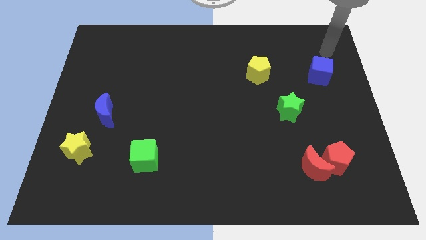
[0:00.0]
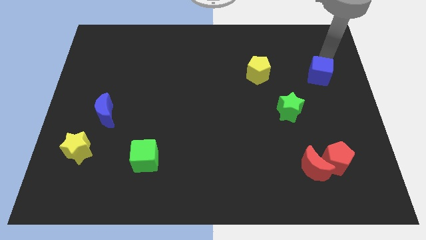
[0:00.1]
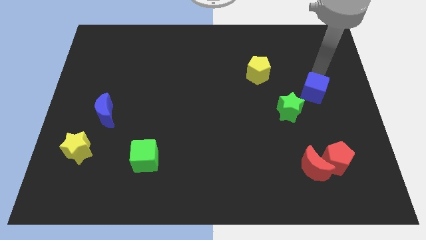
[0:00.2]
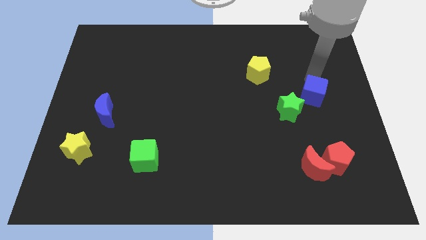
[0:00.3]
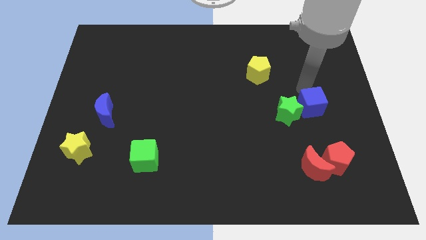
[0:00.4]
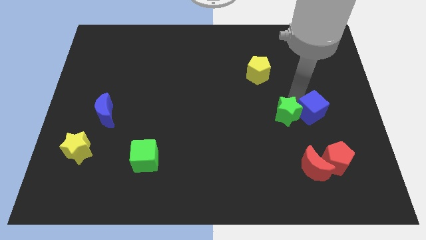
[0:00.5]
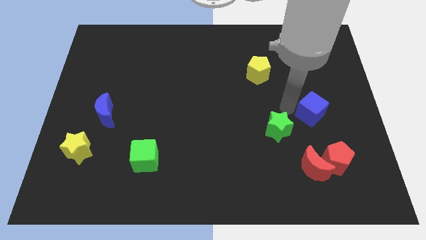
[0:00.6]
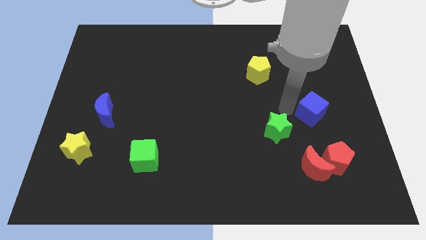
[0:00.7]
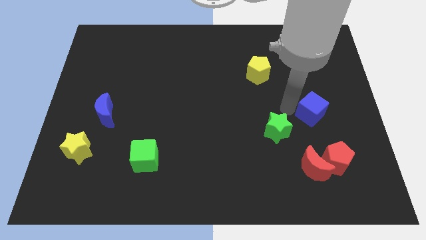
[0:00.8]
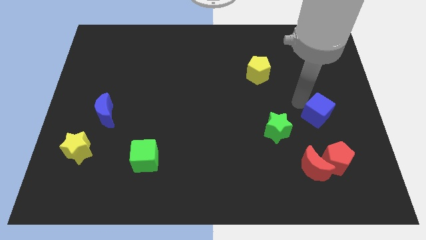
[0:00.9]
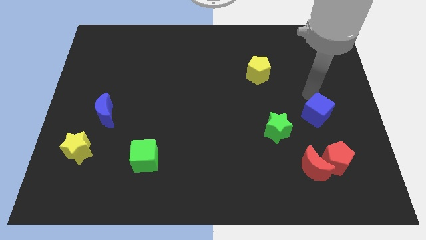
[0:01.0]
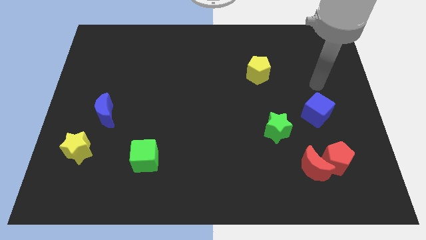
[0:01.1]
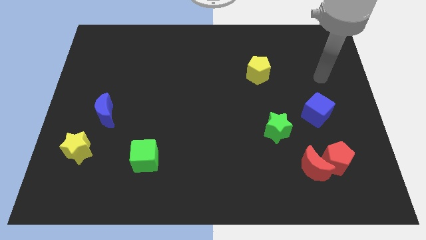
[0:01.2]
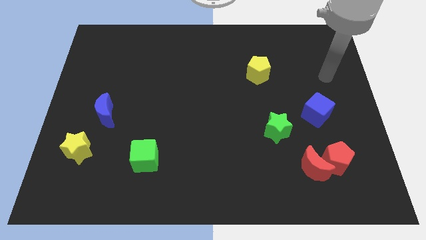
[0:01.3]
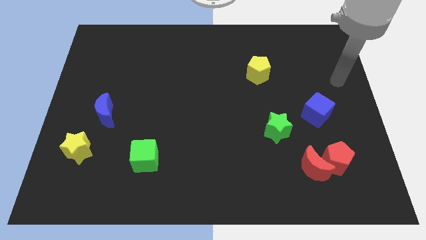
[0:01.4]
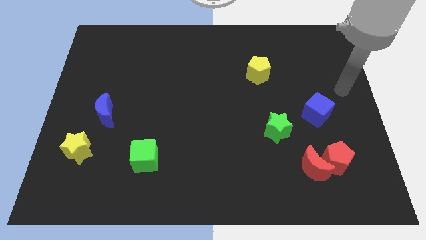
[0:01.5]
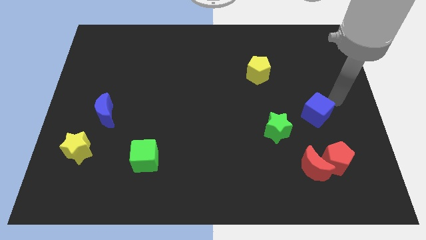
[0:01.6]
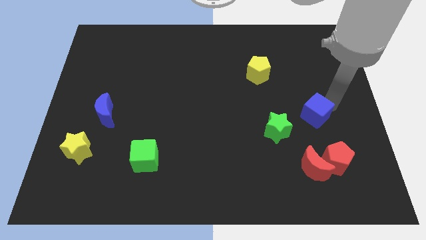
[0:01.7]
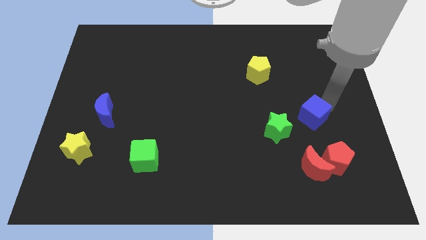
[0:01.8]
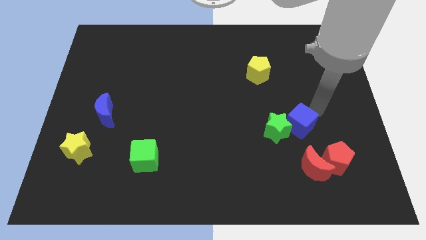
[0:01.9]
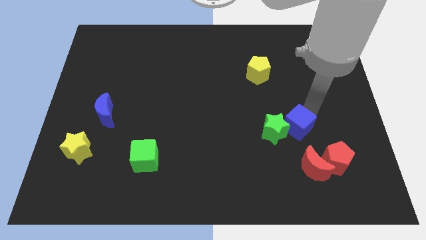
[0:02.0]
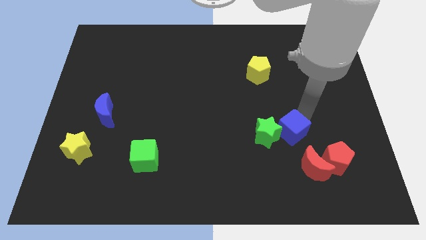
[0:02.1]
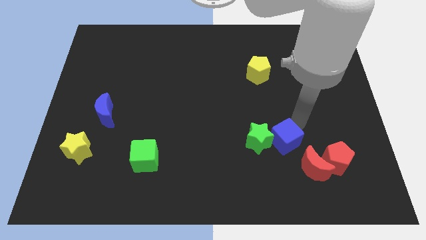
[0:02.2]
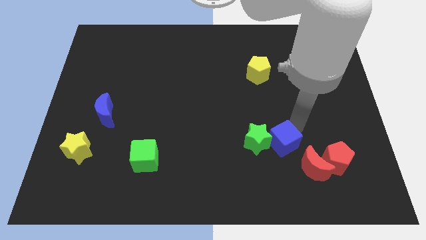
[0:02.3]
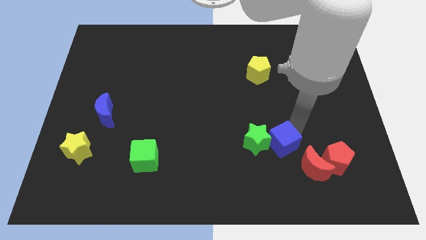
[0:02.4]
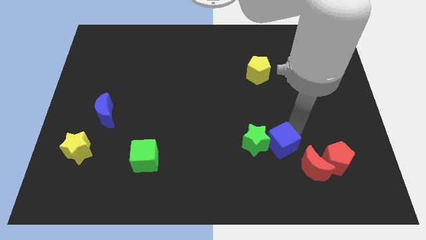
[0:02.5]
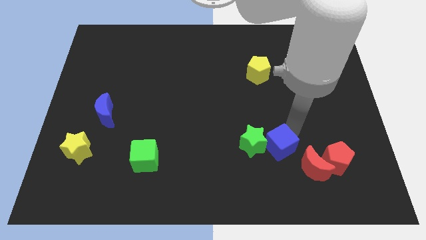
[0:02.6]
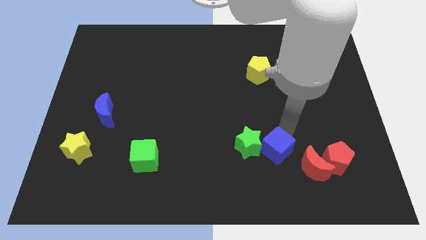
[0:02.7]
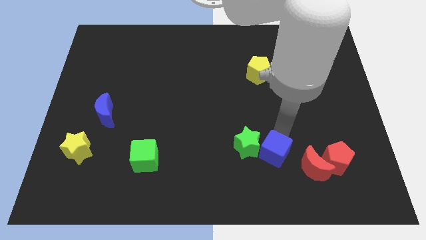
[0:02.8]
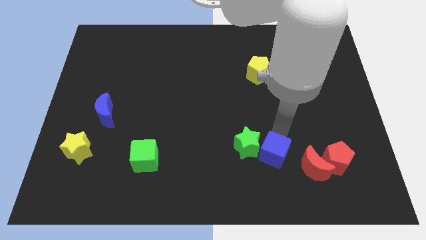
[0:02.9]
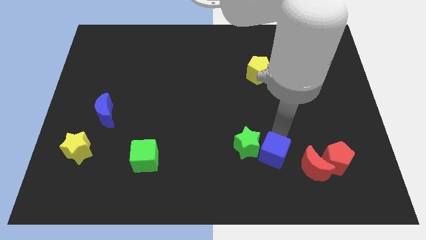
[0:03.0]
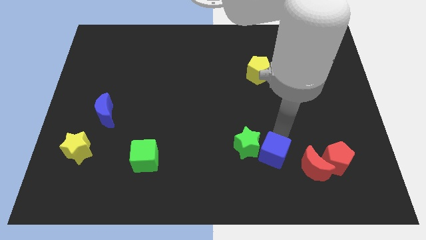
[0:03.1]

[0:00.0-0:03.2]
push the blue cube towards right of the green star

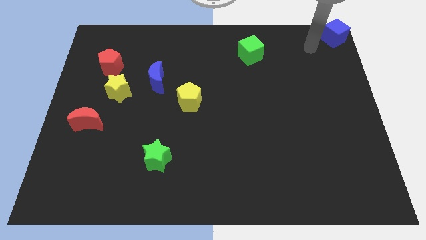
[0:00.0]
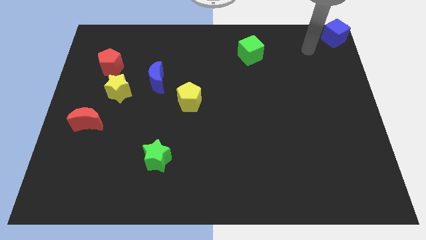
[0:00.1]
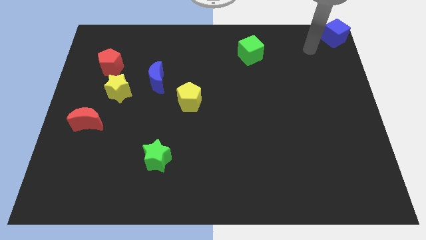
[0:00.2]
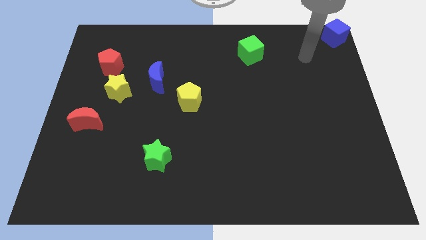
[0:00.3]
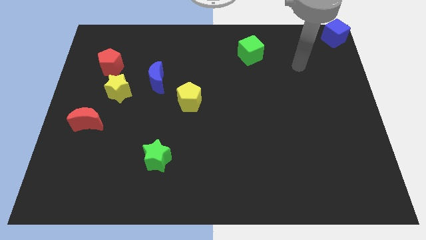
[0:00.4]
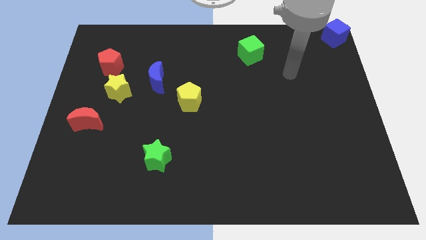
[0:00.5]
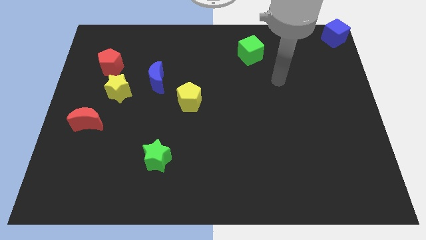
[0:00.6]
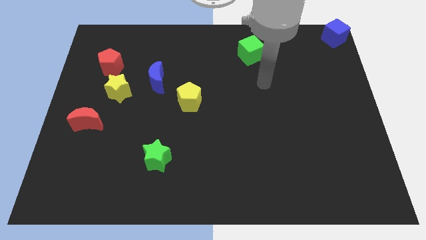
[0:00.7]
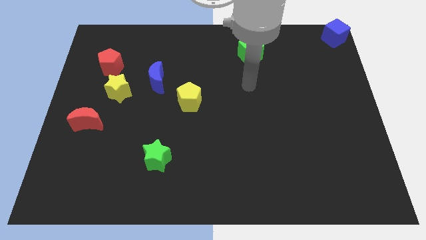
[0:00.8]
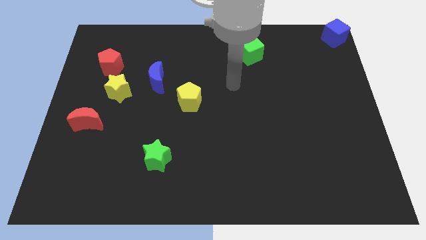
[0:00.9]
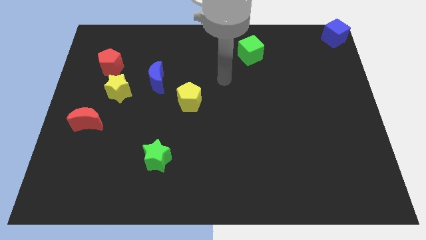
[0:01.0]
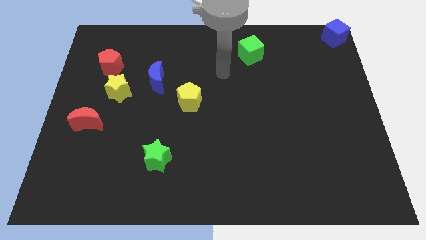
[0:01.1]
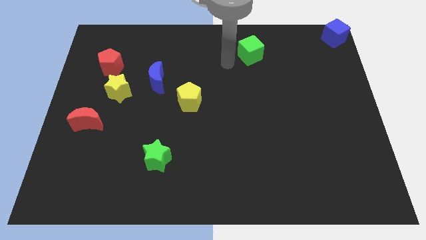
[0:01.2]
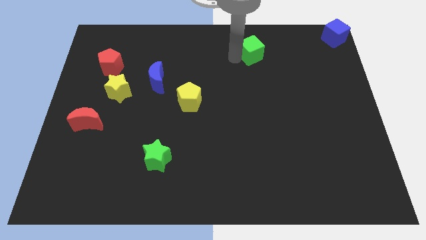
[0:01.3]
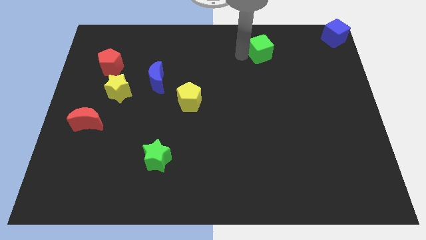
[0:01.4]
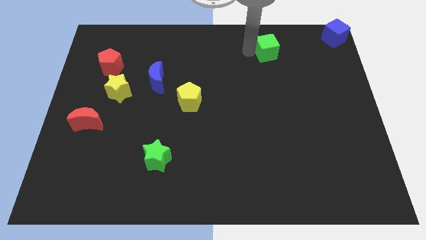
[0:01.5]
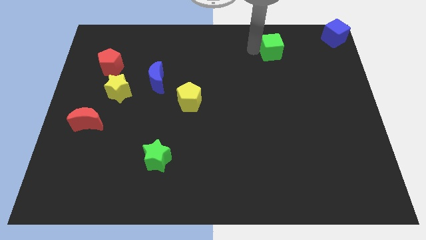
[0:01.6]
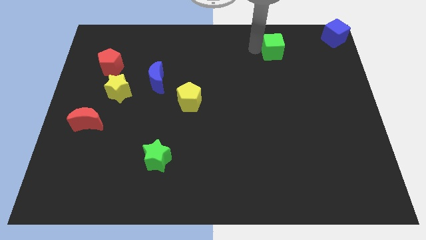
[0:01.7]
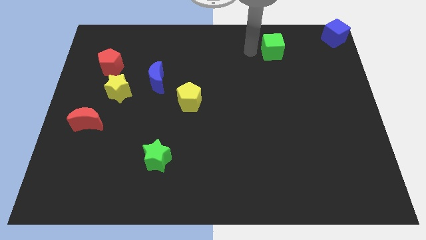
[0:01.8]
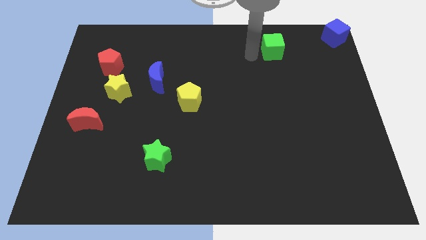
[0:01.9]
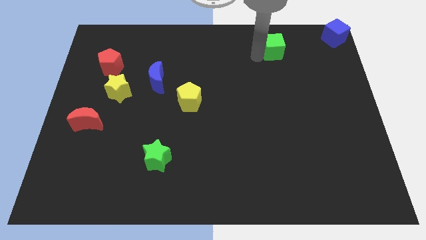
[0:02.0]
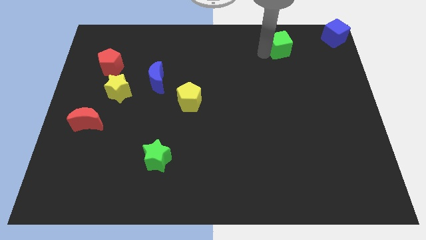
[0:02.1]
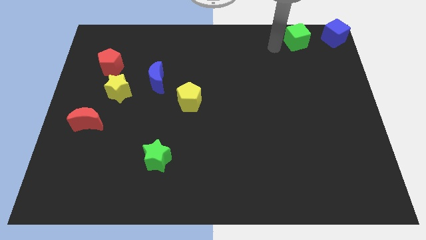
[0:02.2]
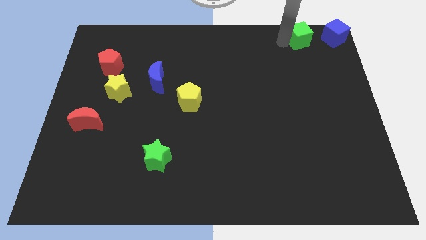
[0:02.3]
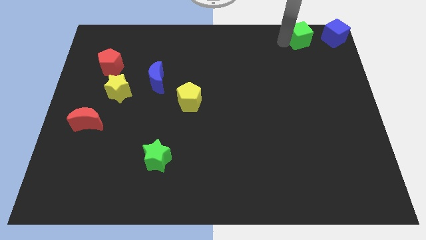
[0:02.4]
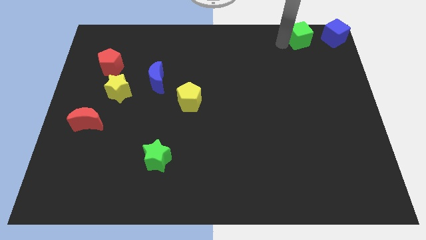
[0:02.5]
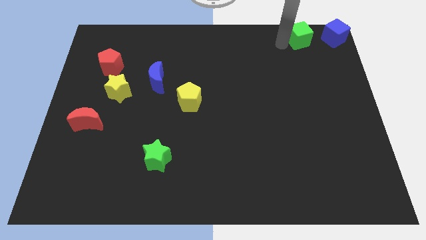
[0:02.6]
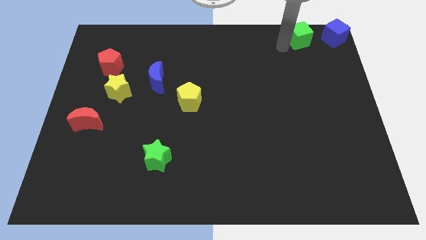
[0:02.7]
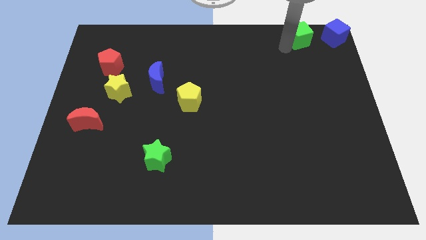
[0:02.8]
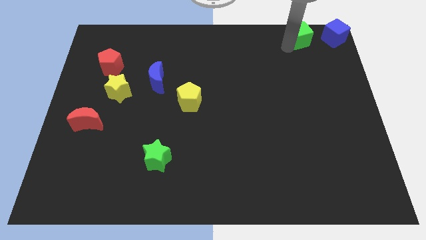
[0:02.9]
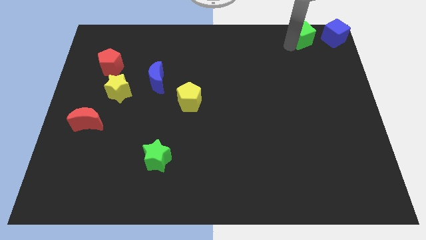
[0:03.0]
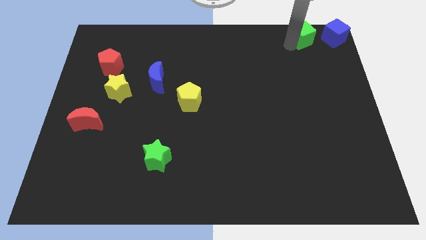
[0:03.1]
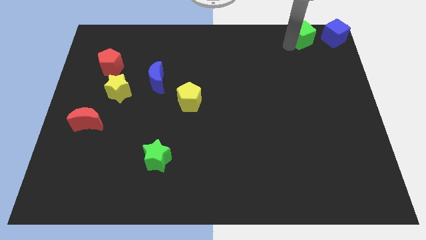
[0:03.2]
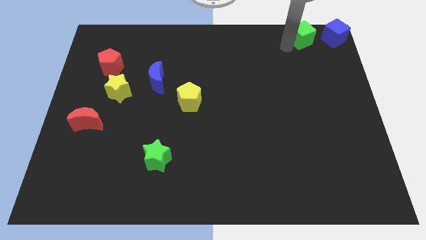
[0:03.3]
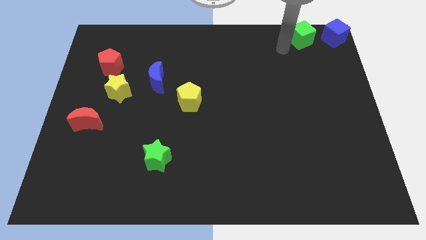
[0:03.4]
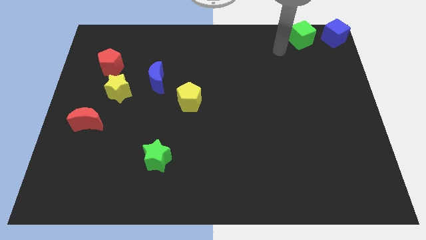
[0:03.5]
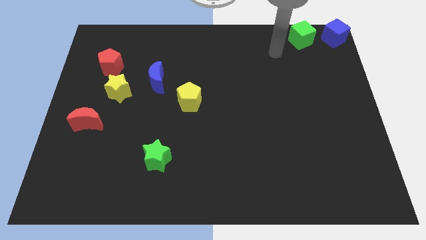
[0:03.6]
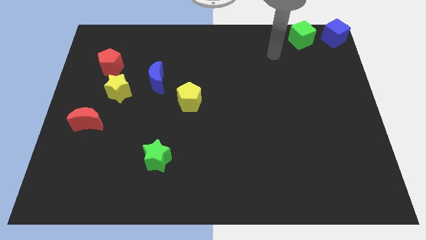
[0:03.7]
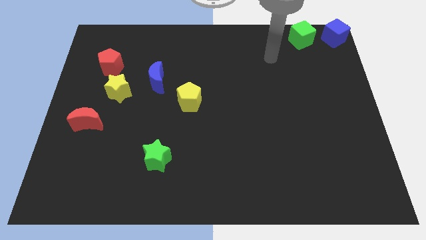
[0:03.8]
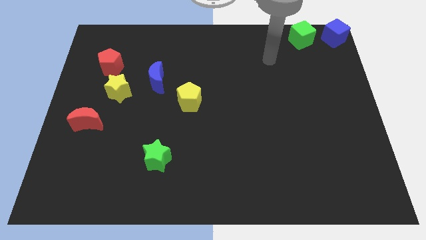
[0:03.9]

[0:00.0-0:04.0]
push the green cube close to the blue cube

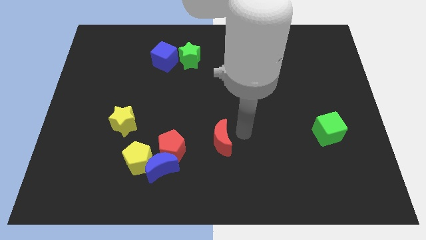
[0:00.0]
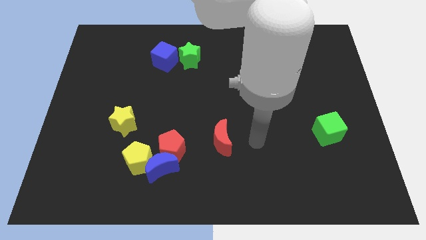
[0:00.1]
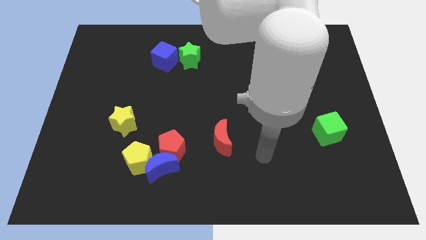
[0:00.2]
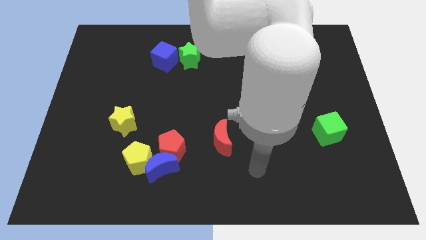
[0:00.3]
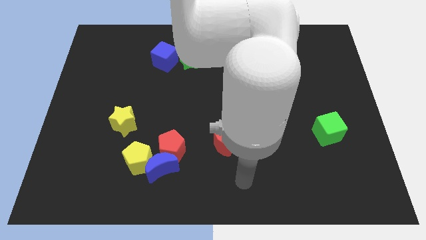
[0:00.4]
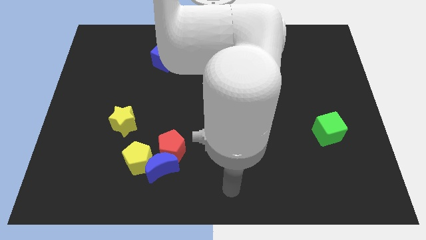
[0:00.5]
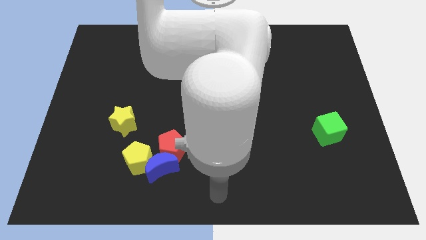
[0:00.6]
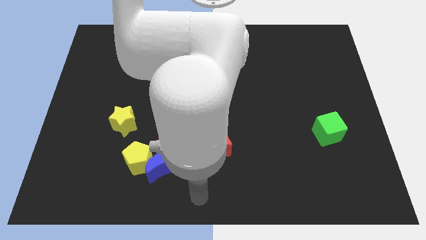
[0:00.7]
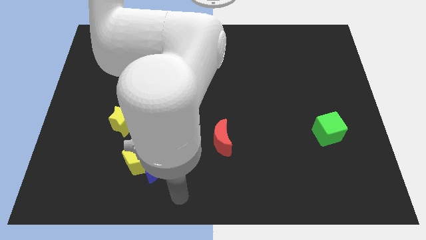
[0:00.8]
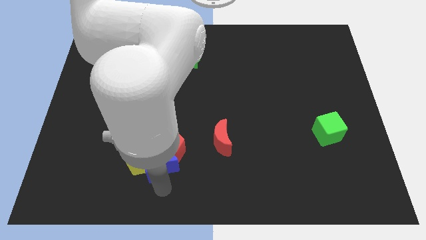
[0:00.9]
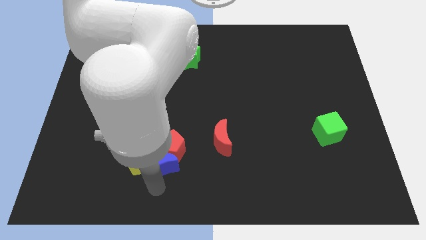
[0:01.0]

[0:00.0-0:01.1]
point your arm at the bottom of blue moon

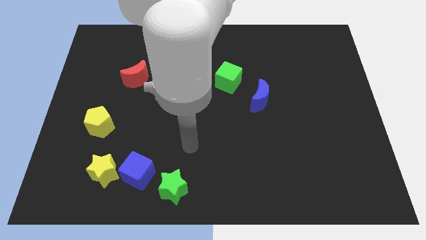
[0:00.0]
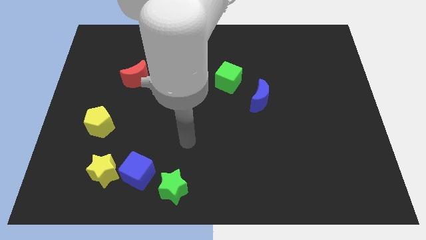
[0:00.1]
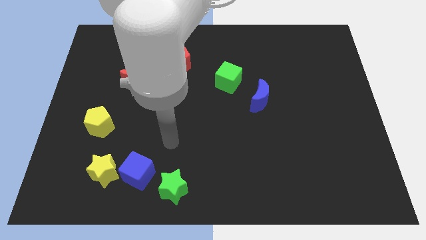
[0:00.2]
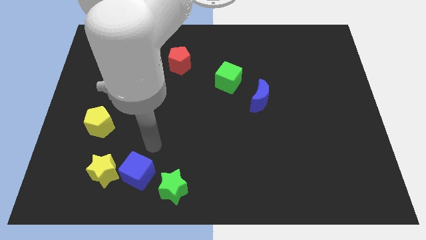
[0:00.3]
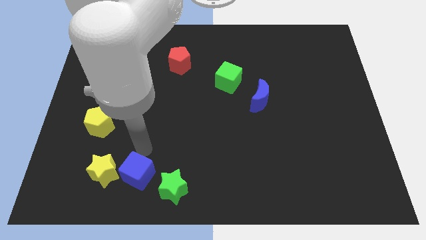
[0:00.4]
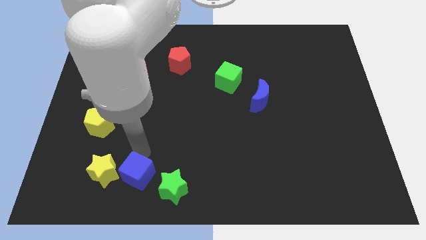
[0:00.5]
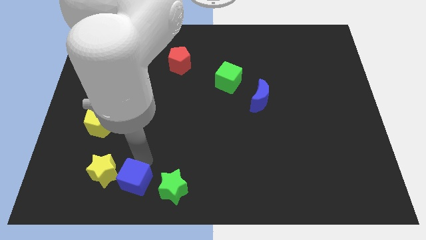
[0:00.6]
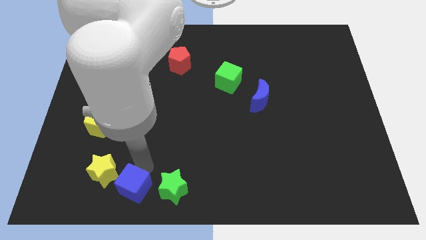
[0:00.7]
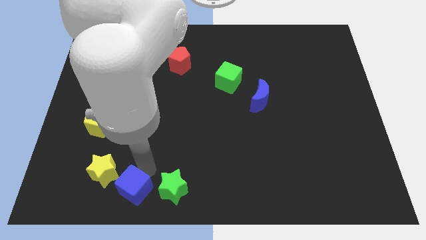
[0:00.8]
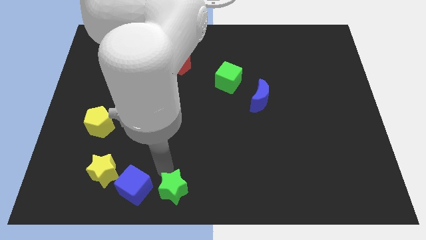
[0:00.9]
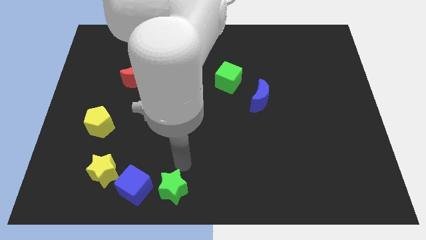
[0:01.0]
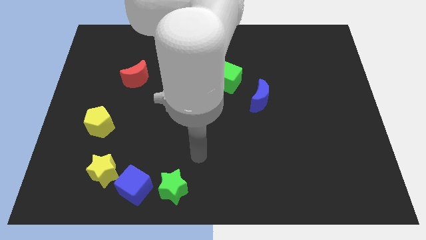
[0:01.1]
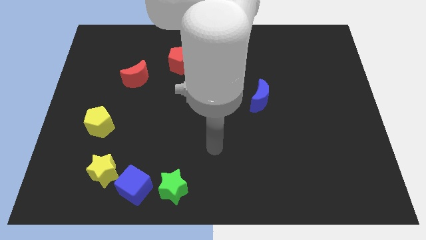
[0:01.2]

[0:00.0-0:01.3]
slightly push cube in between the green and yellow star
